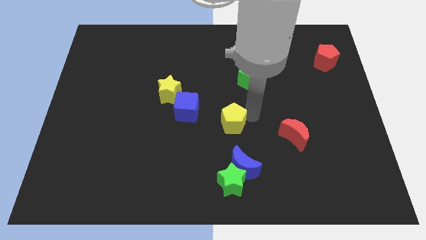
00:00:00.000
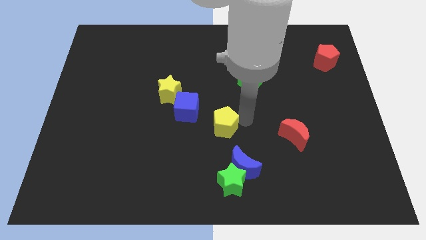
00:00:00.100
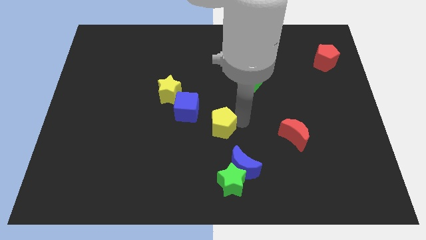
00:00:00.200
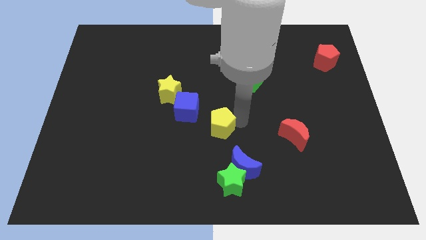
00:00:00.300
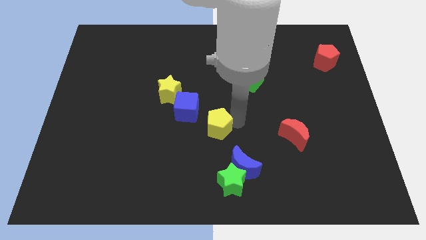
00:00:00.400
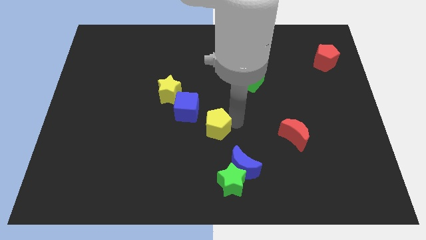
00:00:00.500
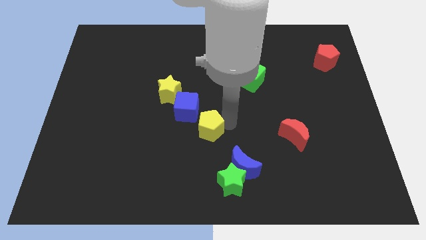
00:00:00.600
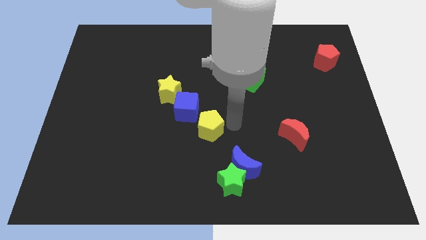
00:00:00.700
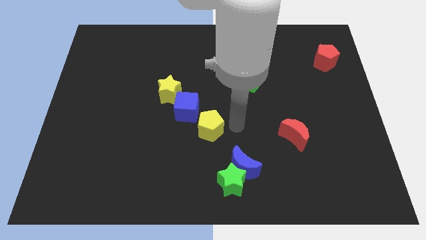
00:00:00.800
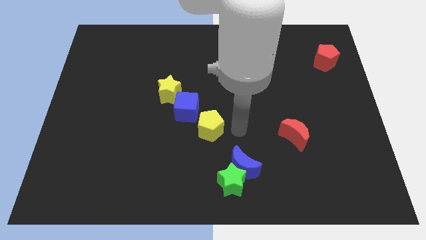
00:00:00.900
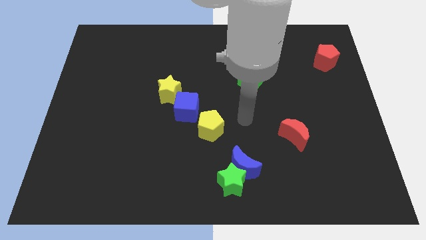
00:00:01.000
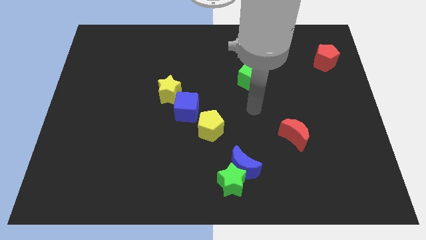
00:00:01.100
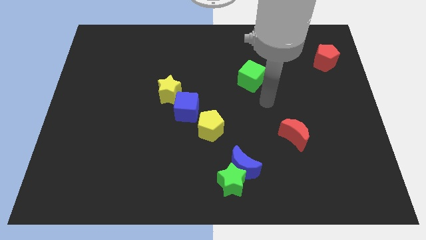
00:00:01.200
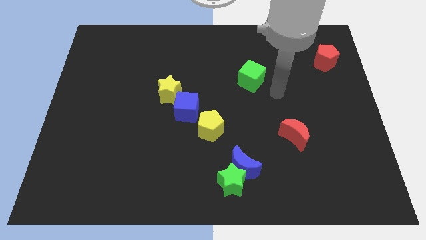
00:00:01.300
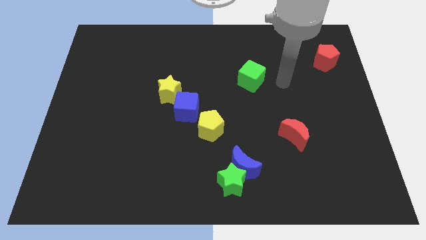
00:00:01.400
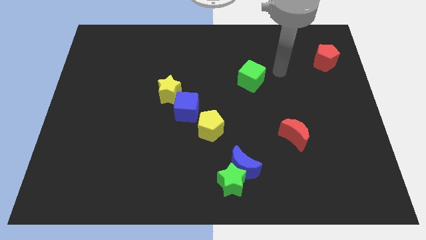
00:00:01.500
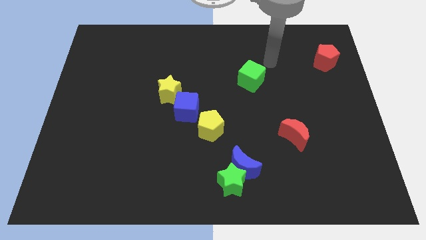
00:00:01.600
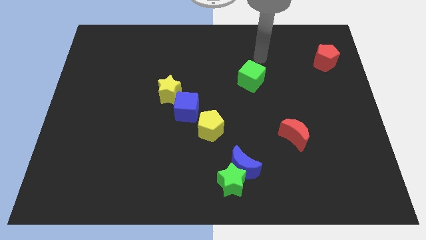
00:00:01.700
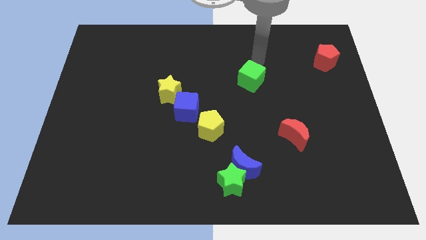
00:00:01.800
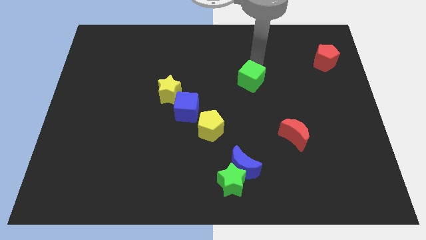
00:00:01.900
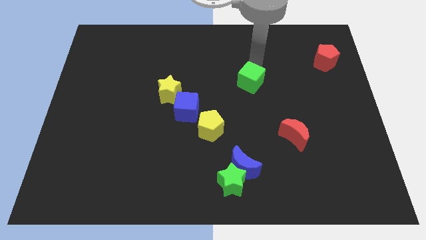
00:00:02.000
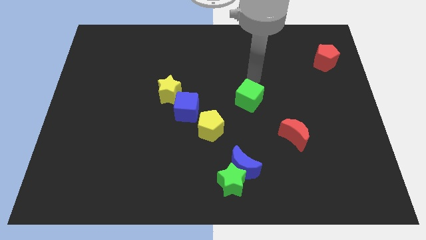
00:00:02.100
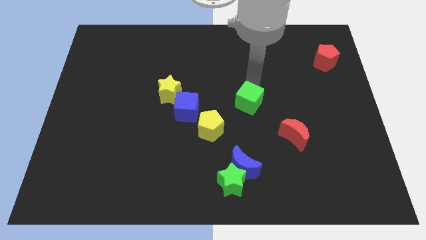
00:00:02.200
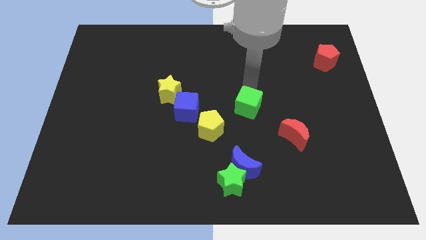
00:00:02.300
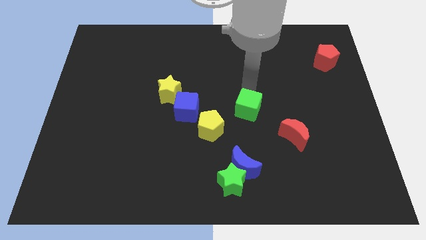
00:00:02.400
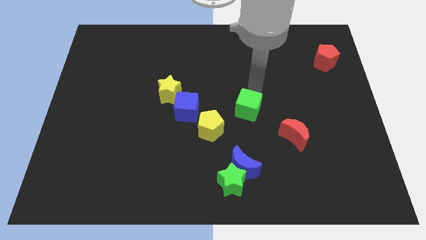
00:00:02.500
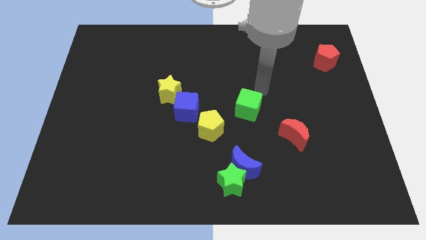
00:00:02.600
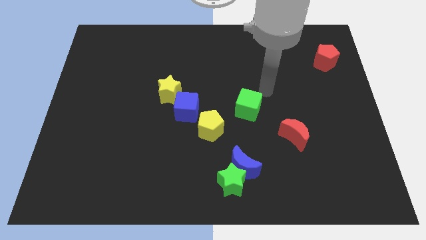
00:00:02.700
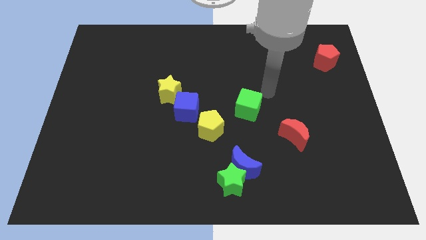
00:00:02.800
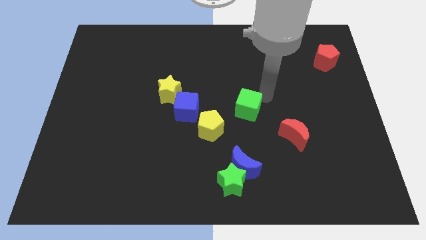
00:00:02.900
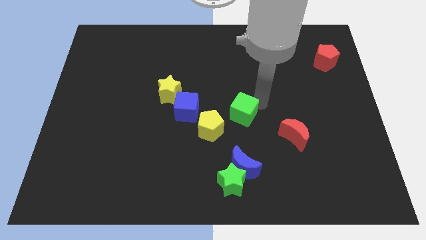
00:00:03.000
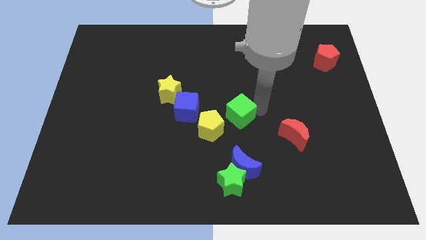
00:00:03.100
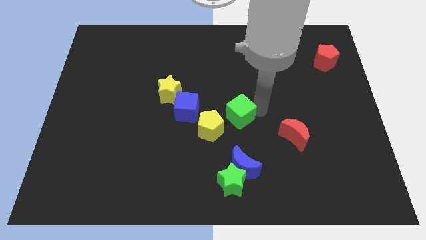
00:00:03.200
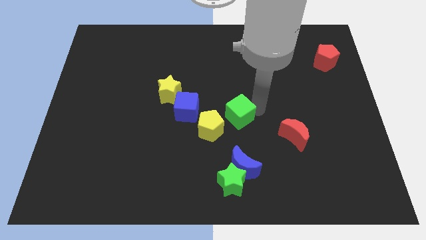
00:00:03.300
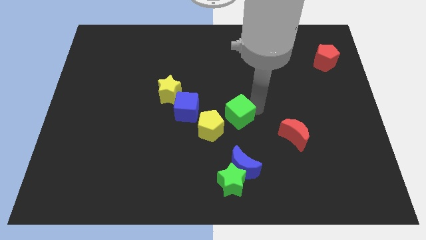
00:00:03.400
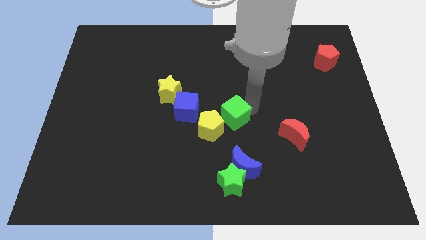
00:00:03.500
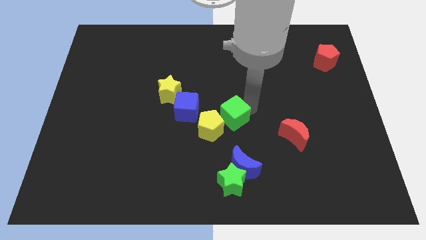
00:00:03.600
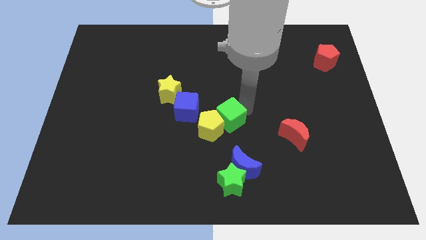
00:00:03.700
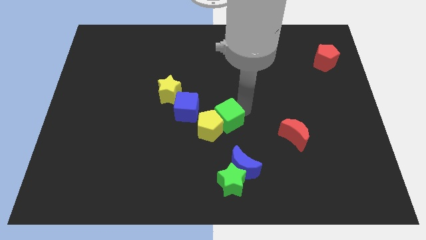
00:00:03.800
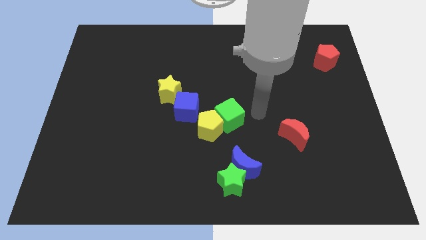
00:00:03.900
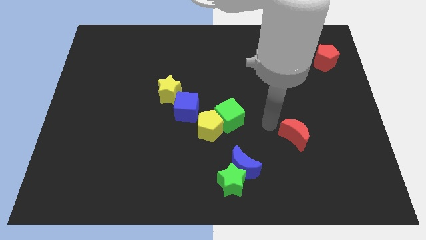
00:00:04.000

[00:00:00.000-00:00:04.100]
push the green cube into the yellow pentagon

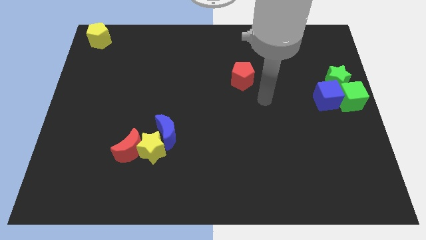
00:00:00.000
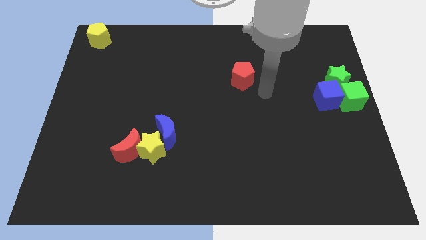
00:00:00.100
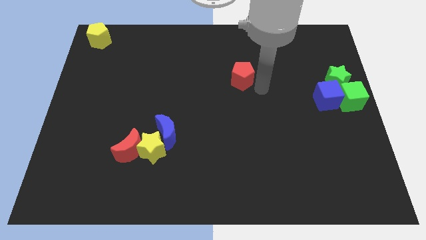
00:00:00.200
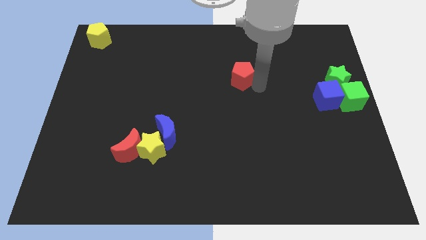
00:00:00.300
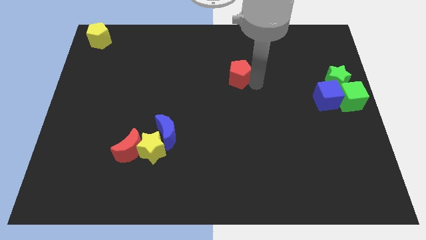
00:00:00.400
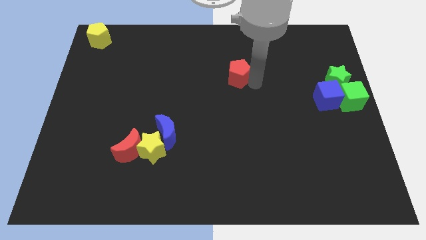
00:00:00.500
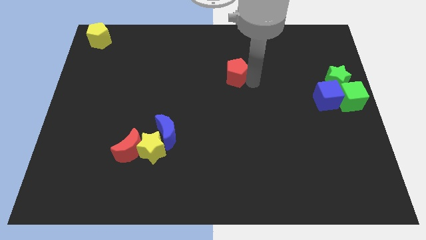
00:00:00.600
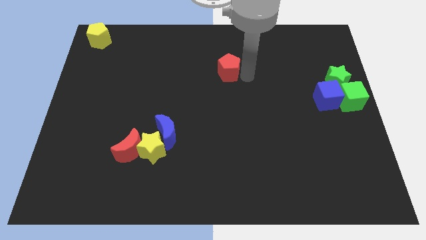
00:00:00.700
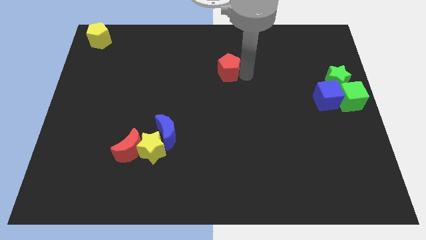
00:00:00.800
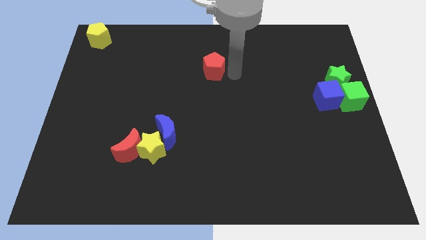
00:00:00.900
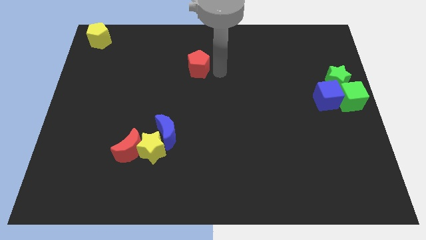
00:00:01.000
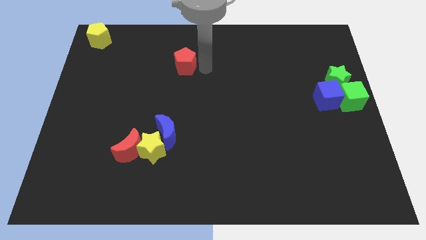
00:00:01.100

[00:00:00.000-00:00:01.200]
slide red pentagon to the top right of blue moon

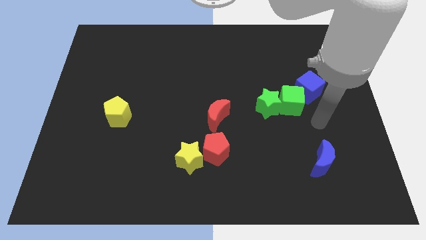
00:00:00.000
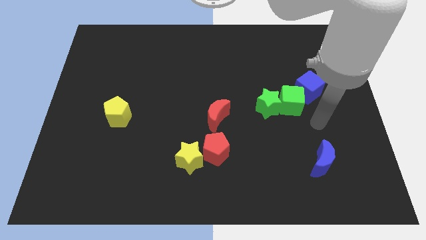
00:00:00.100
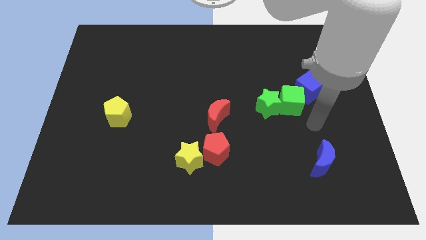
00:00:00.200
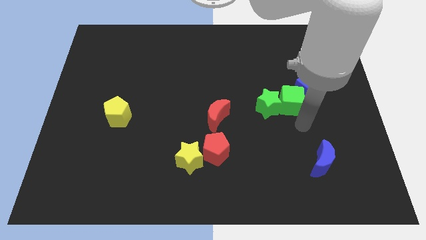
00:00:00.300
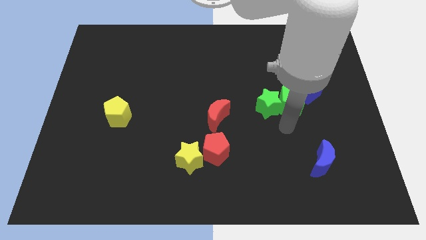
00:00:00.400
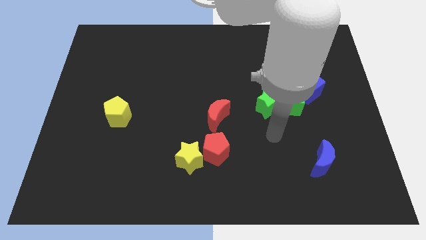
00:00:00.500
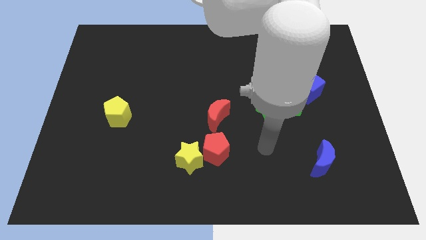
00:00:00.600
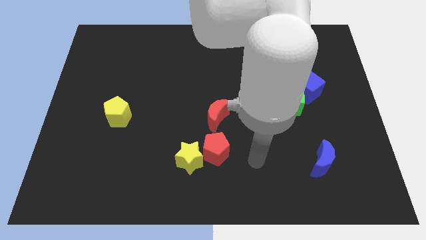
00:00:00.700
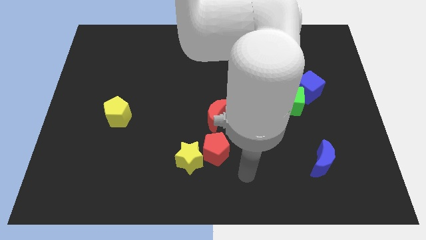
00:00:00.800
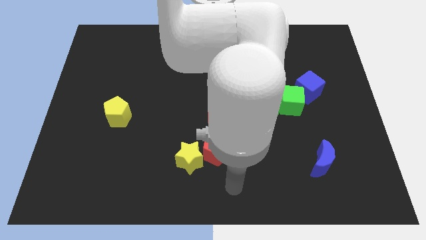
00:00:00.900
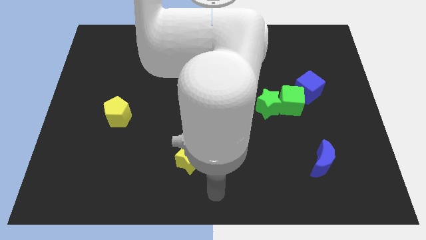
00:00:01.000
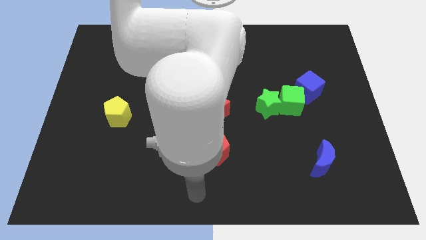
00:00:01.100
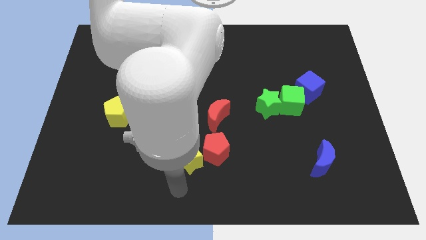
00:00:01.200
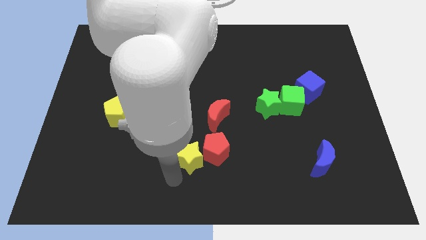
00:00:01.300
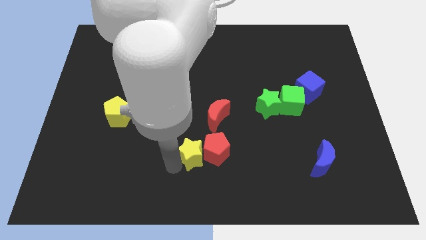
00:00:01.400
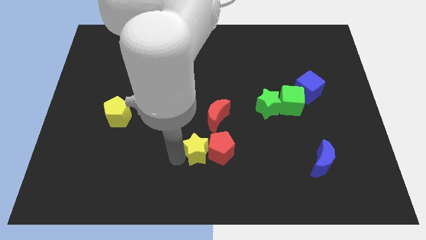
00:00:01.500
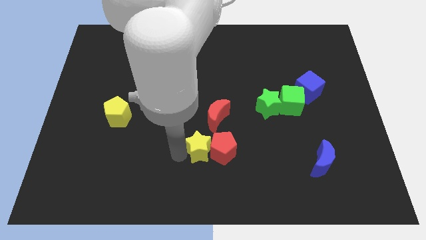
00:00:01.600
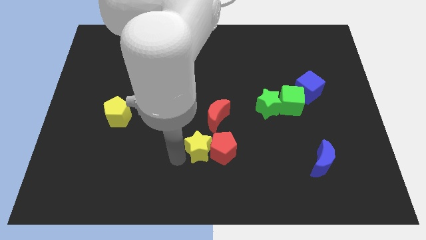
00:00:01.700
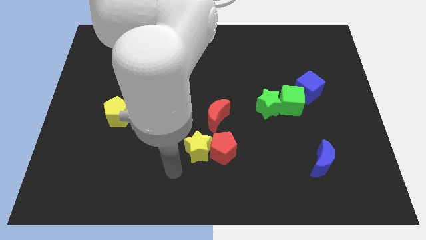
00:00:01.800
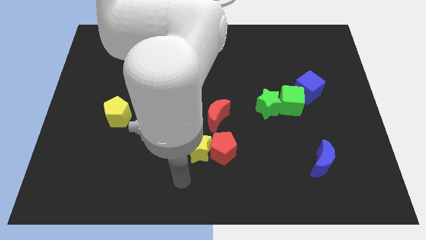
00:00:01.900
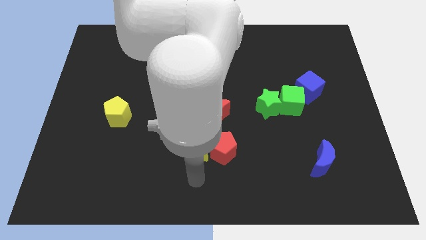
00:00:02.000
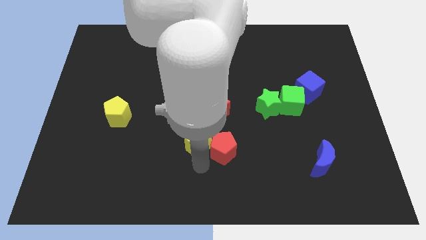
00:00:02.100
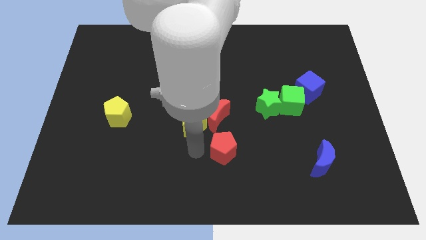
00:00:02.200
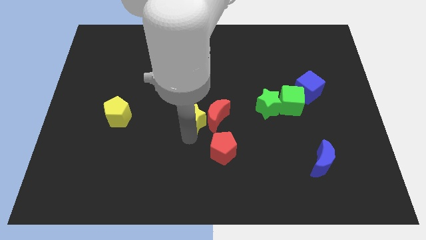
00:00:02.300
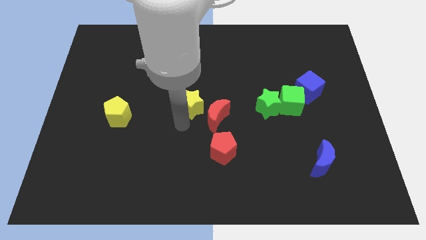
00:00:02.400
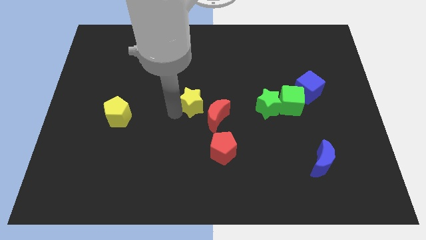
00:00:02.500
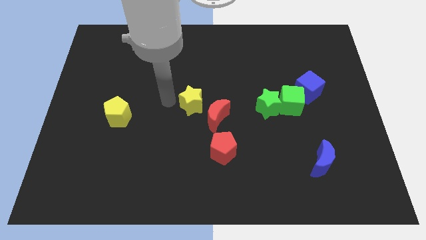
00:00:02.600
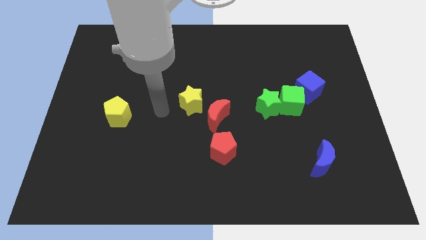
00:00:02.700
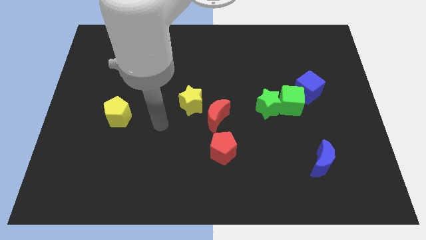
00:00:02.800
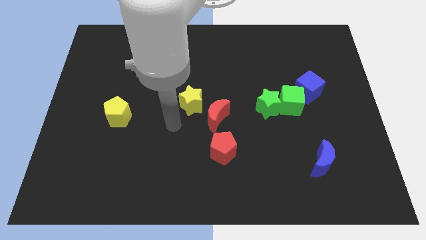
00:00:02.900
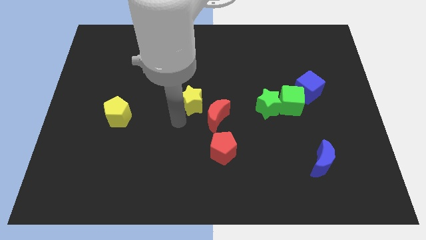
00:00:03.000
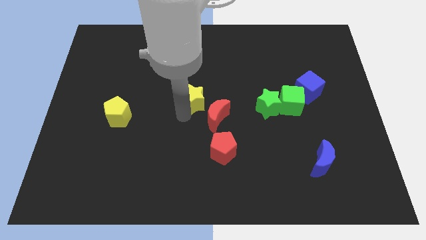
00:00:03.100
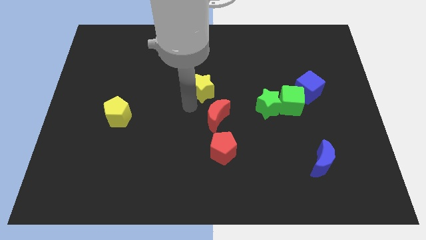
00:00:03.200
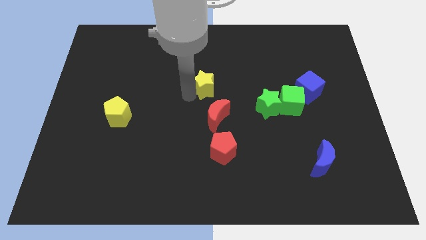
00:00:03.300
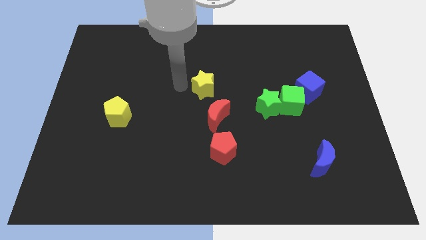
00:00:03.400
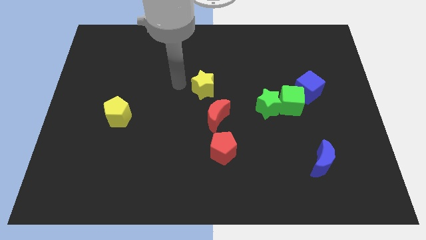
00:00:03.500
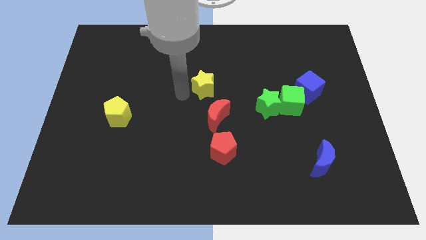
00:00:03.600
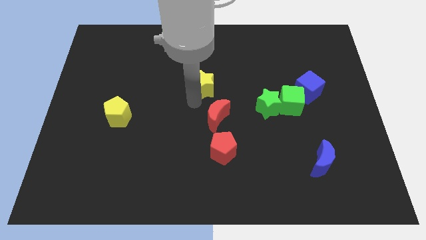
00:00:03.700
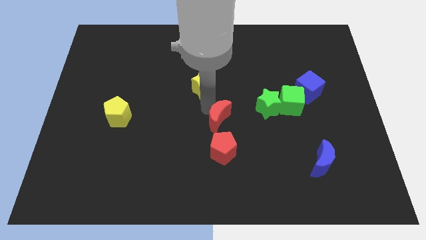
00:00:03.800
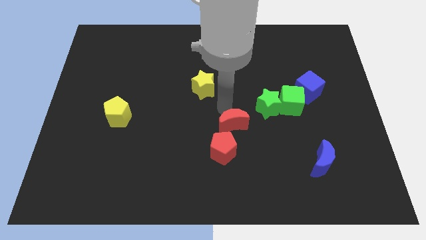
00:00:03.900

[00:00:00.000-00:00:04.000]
place the yellow star on top left of the red crescent
